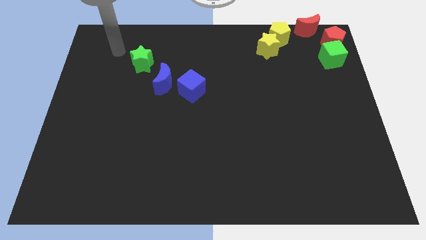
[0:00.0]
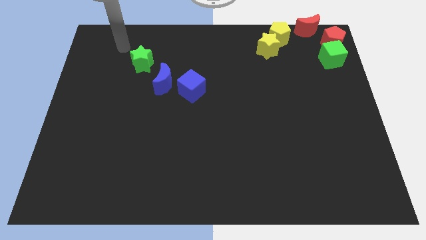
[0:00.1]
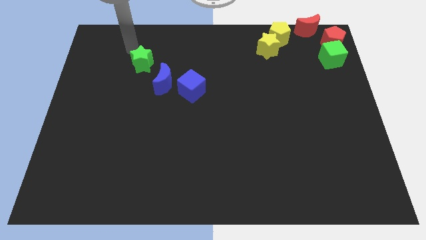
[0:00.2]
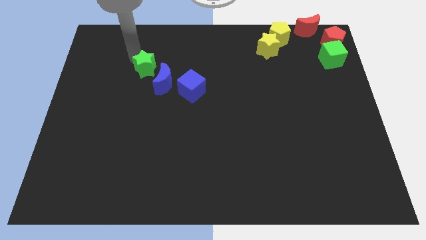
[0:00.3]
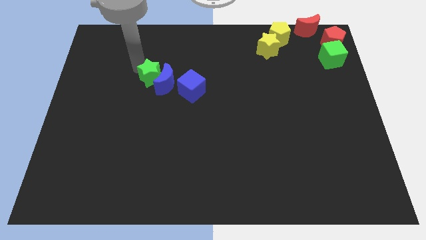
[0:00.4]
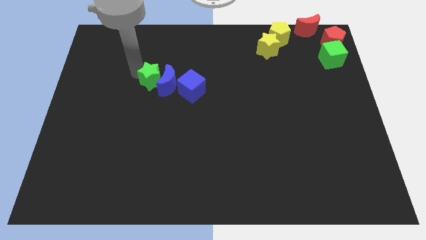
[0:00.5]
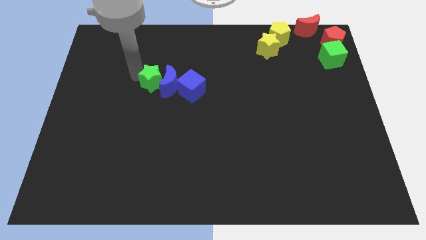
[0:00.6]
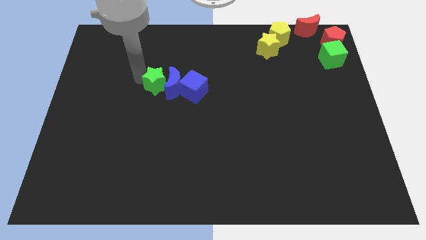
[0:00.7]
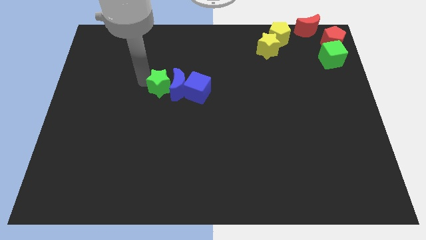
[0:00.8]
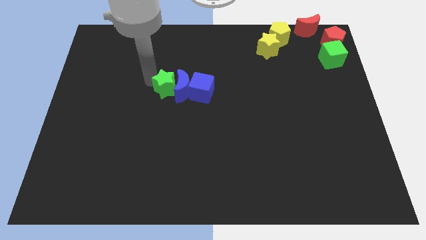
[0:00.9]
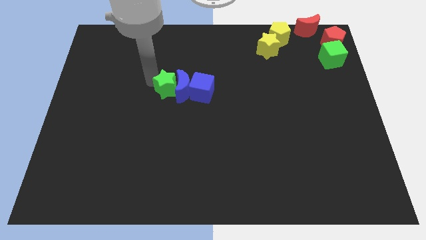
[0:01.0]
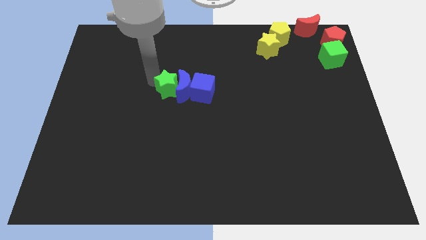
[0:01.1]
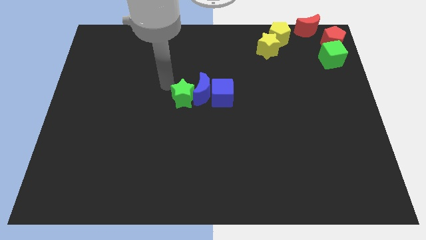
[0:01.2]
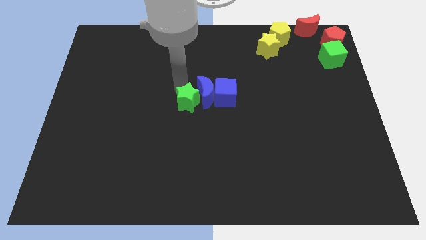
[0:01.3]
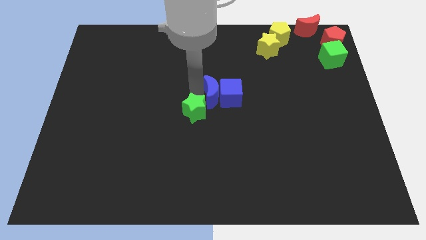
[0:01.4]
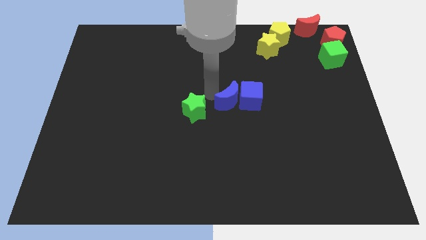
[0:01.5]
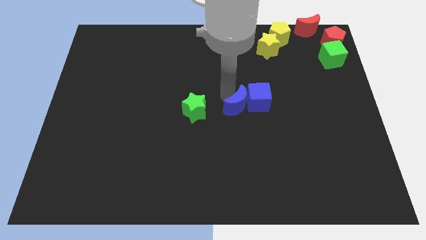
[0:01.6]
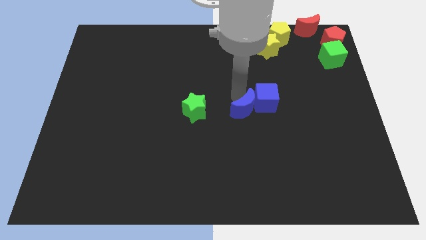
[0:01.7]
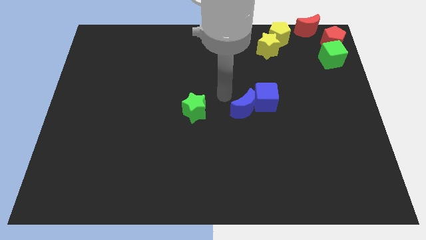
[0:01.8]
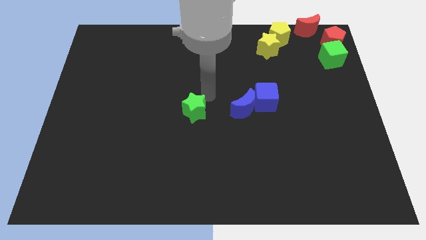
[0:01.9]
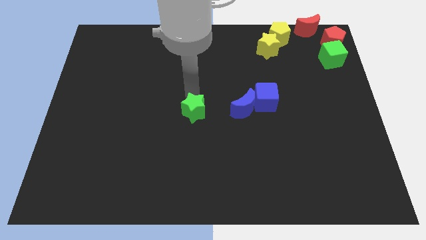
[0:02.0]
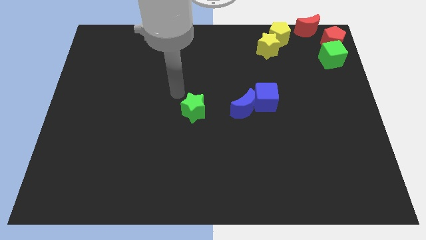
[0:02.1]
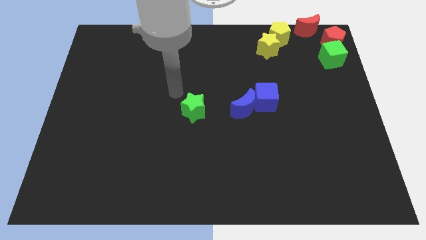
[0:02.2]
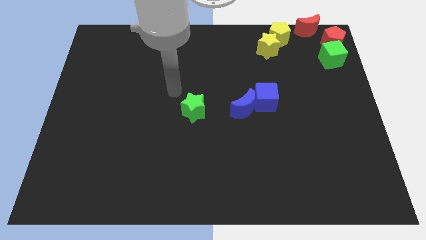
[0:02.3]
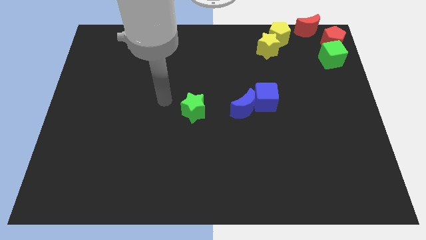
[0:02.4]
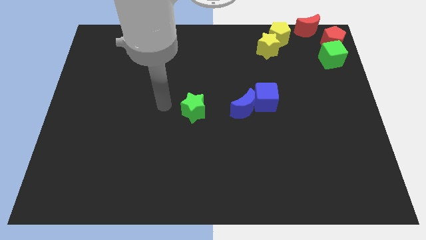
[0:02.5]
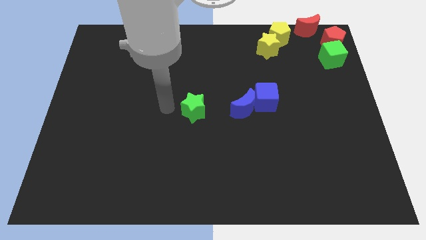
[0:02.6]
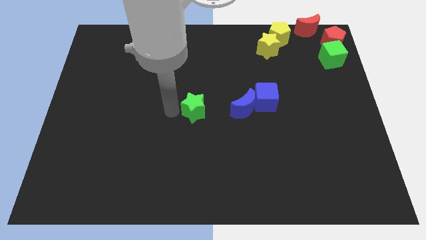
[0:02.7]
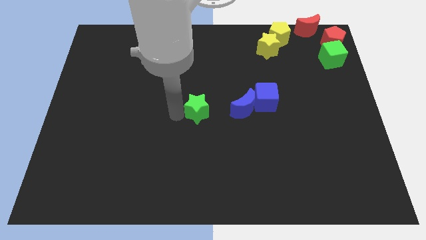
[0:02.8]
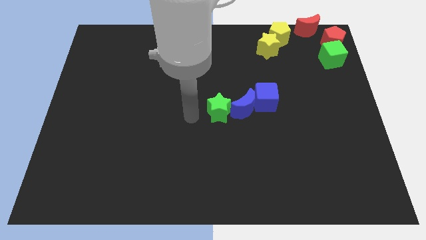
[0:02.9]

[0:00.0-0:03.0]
move green star towards center

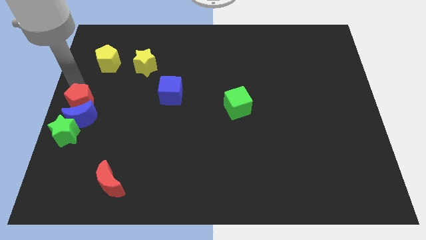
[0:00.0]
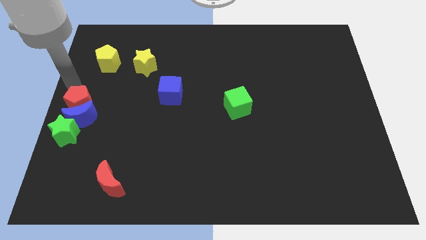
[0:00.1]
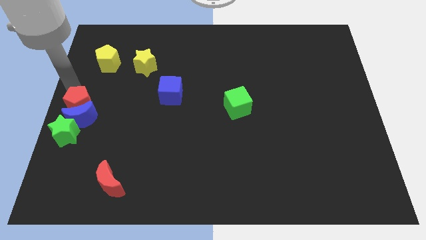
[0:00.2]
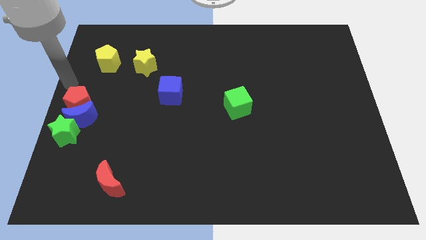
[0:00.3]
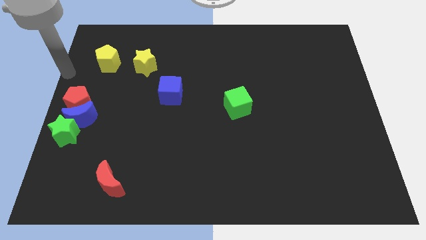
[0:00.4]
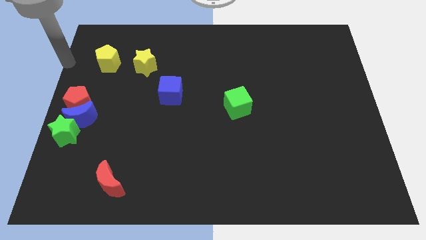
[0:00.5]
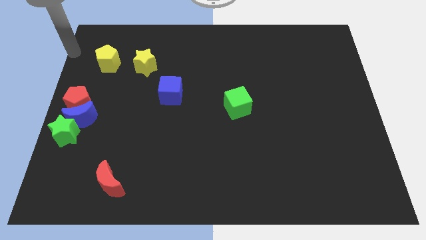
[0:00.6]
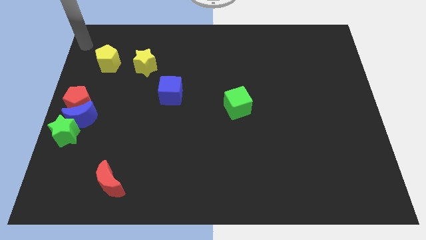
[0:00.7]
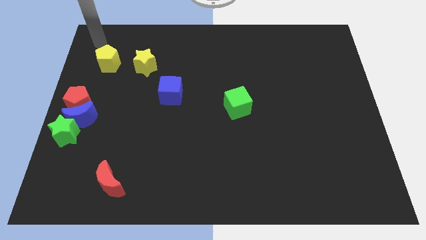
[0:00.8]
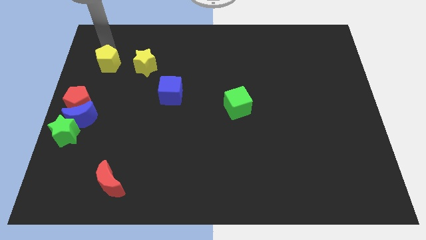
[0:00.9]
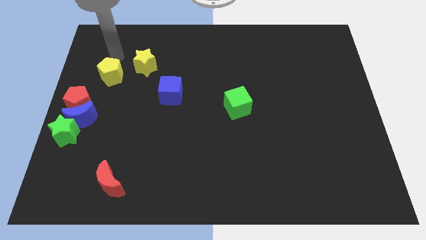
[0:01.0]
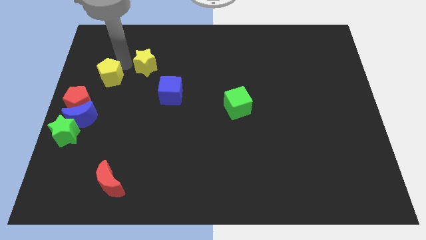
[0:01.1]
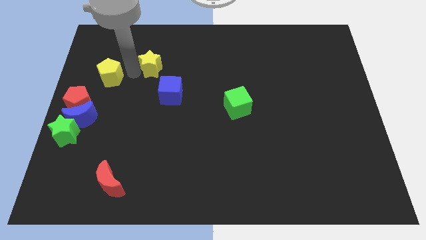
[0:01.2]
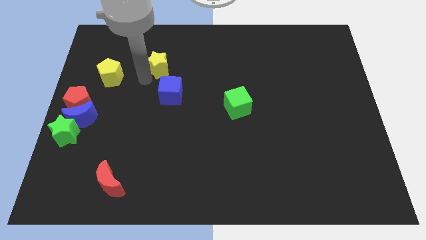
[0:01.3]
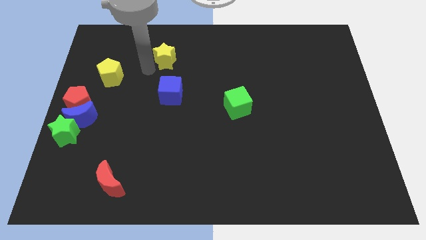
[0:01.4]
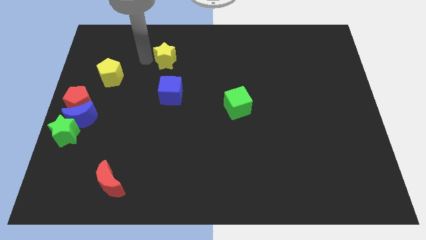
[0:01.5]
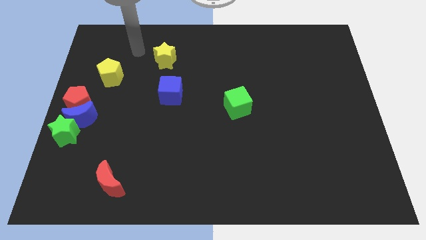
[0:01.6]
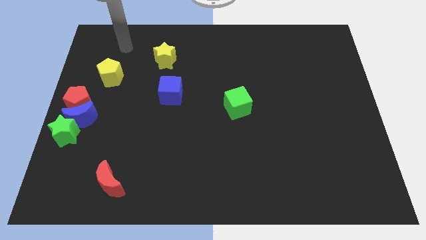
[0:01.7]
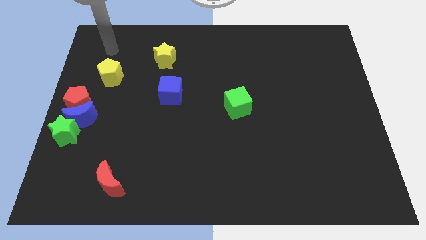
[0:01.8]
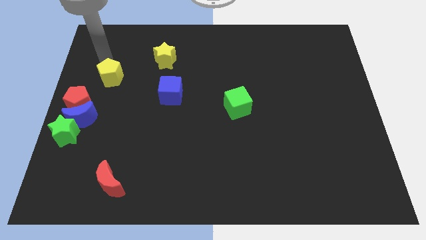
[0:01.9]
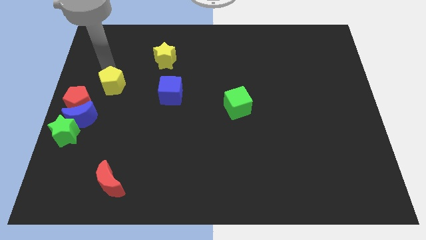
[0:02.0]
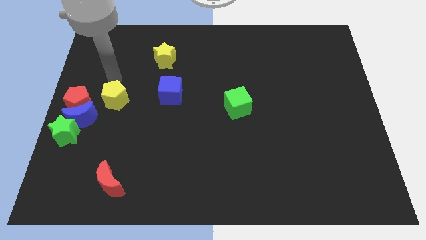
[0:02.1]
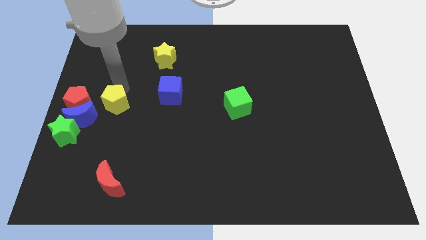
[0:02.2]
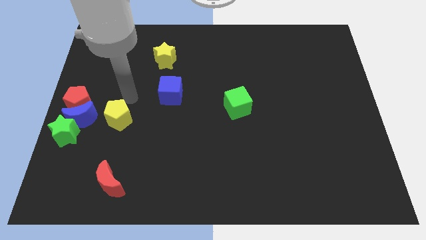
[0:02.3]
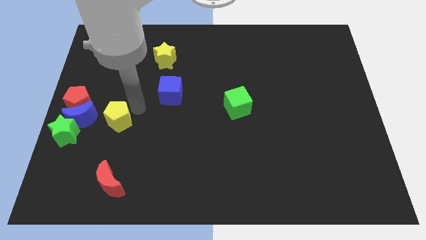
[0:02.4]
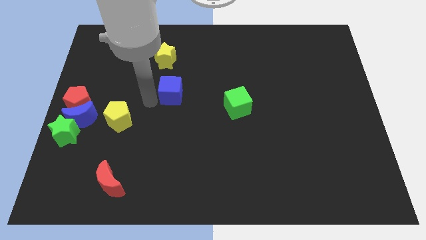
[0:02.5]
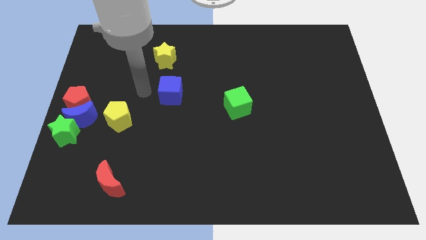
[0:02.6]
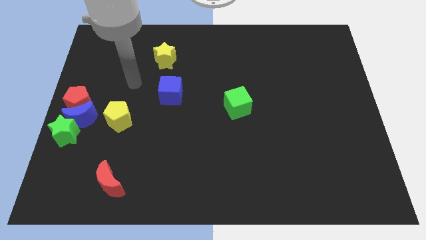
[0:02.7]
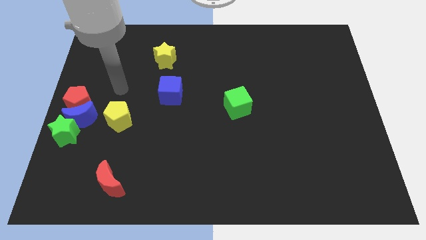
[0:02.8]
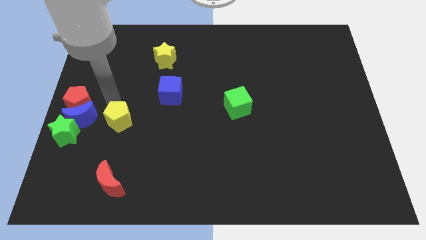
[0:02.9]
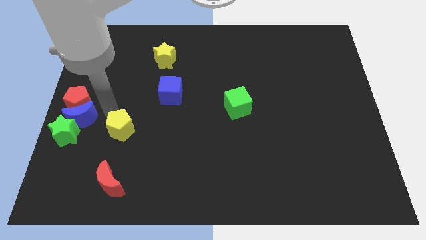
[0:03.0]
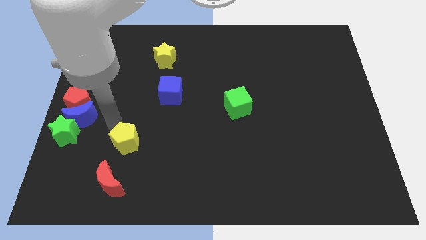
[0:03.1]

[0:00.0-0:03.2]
move yellow pentagon parallel to green star

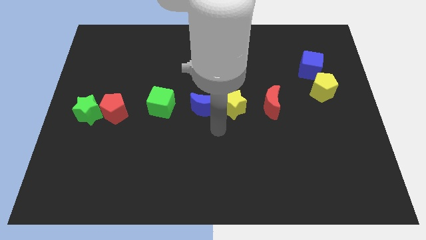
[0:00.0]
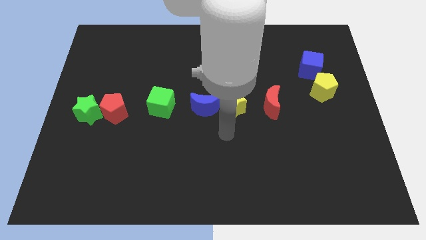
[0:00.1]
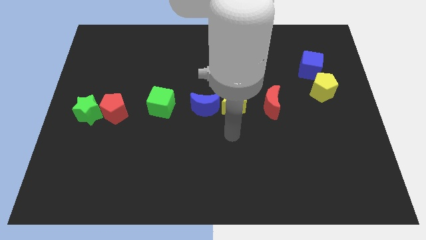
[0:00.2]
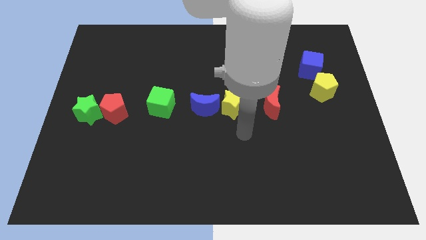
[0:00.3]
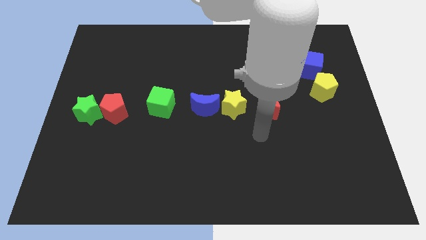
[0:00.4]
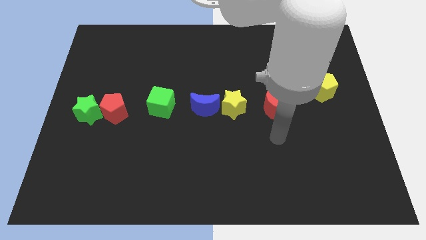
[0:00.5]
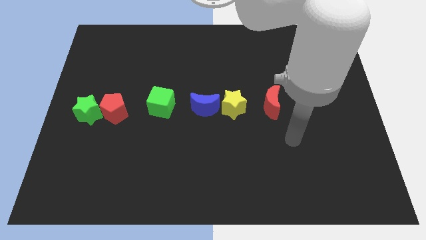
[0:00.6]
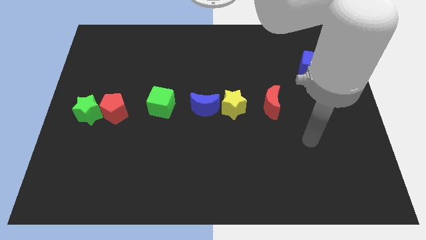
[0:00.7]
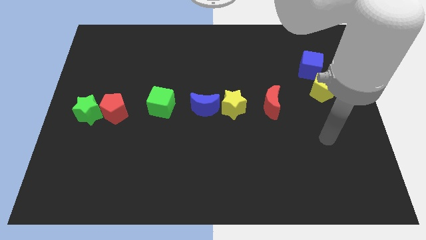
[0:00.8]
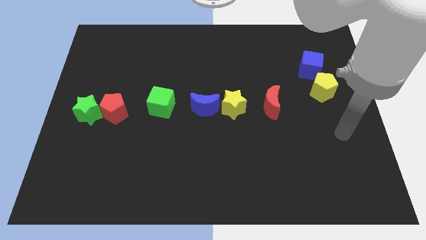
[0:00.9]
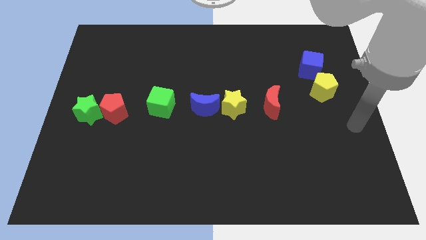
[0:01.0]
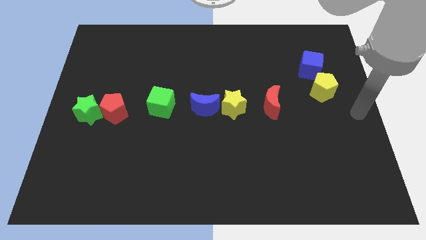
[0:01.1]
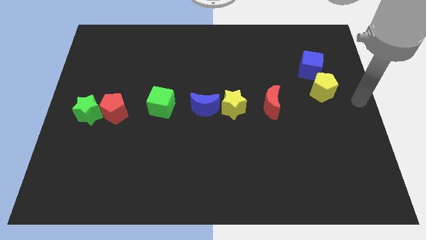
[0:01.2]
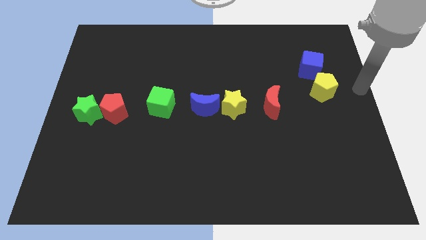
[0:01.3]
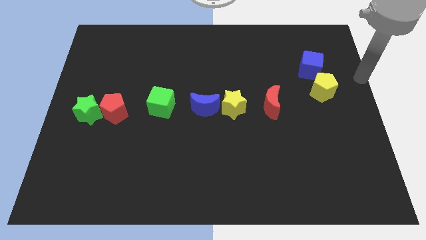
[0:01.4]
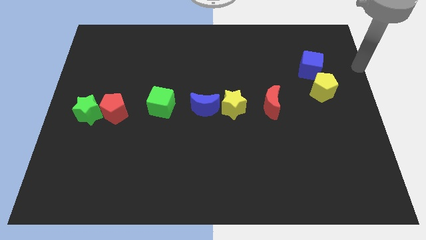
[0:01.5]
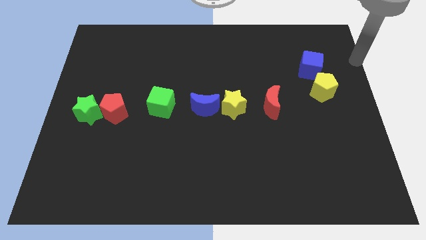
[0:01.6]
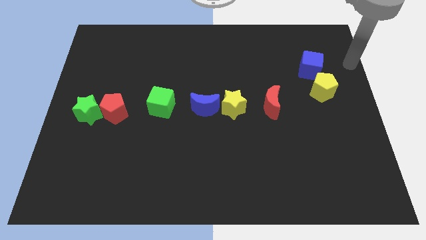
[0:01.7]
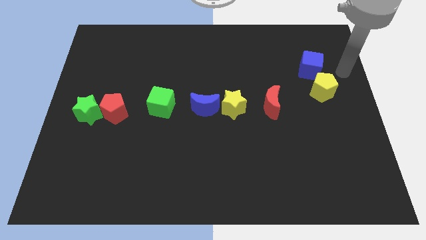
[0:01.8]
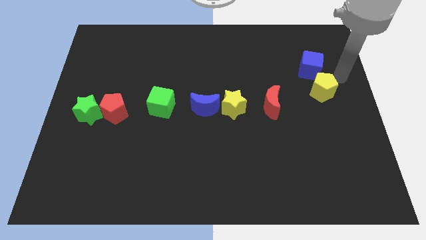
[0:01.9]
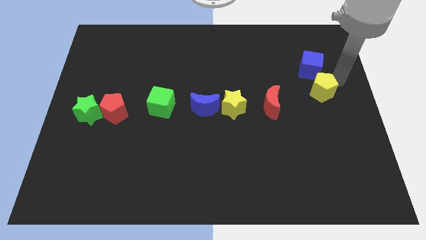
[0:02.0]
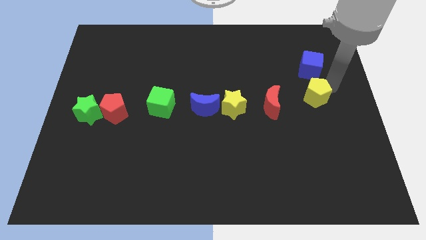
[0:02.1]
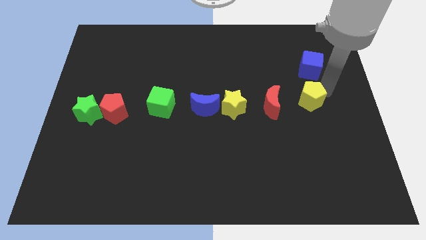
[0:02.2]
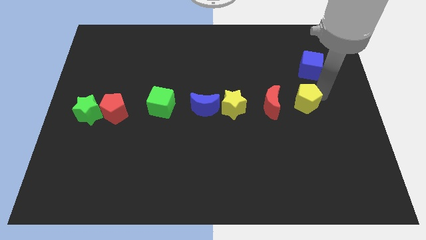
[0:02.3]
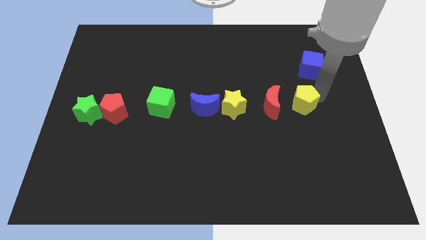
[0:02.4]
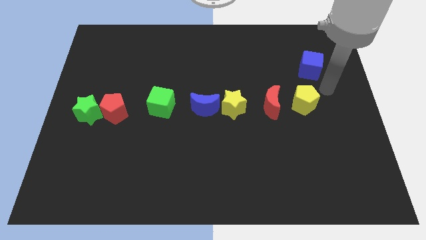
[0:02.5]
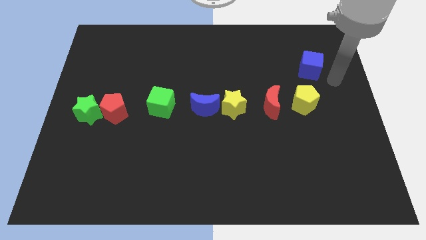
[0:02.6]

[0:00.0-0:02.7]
place the yellow pentagon to the right of the red moon
